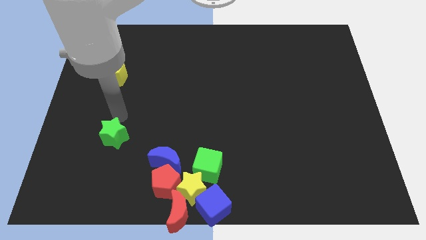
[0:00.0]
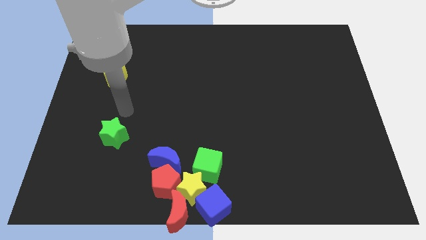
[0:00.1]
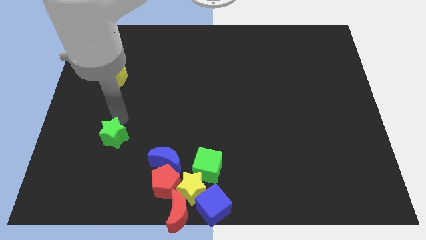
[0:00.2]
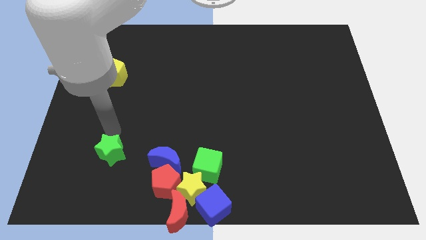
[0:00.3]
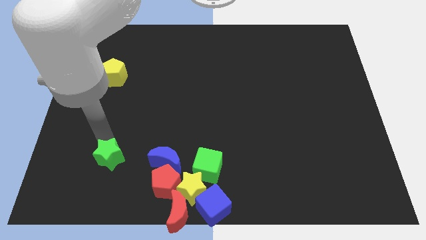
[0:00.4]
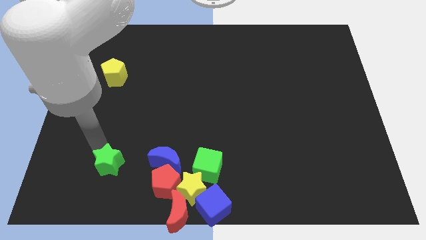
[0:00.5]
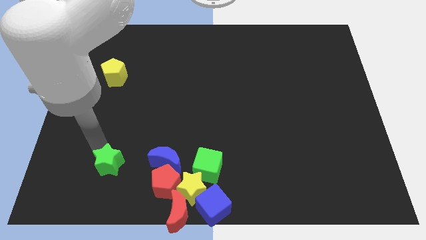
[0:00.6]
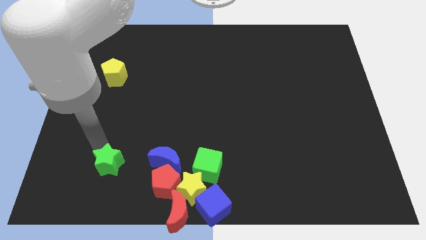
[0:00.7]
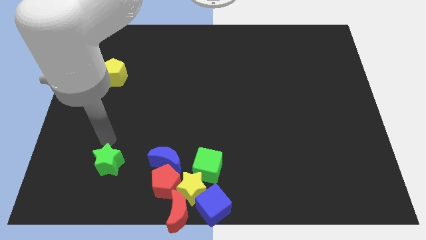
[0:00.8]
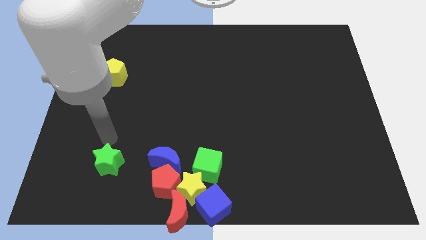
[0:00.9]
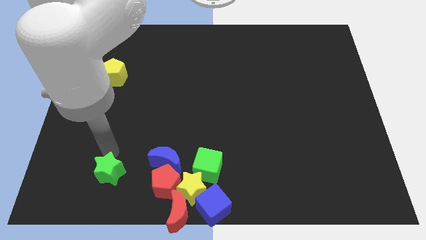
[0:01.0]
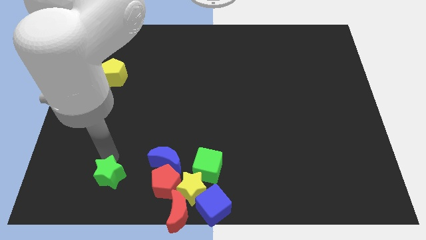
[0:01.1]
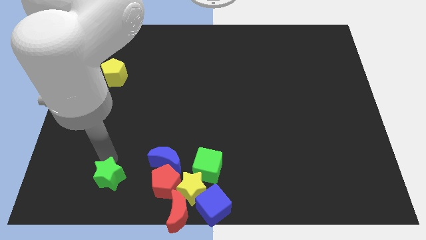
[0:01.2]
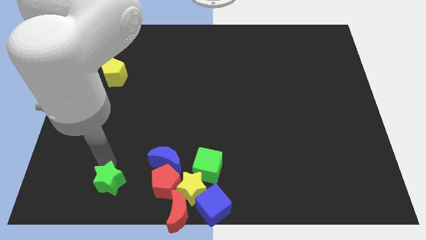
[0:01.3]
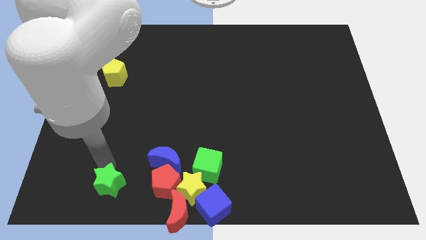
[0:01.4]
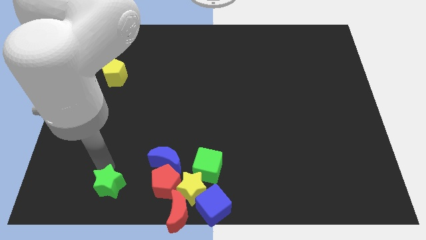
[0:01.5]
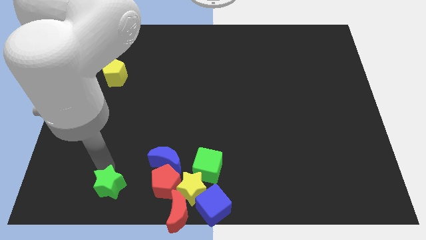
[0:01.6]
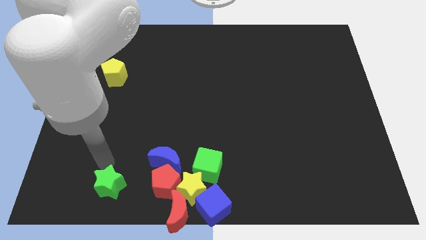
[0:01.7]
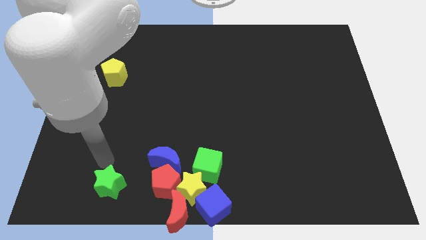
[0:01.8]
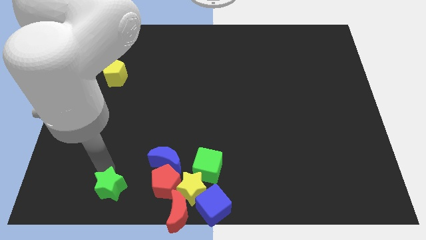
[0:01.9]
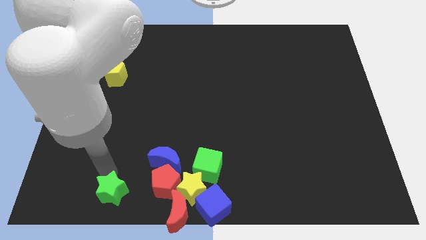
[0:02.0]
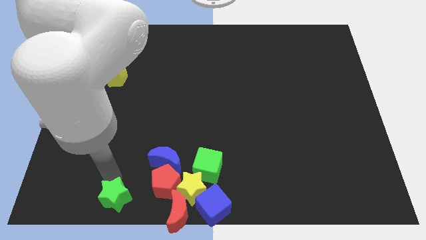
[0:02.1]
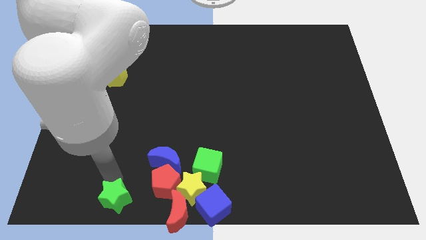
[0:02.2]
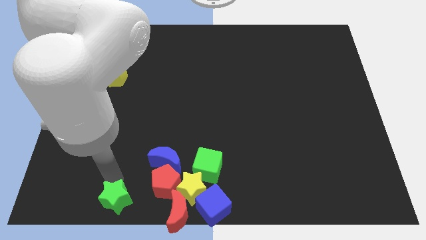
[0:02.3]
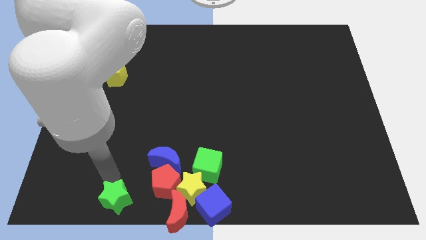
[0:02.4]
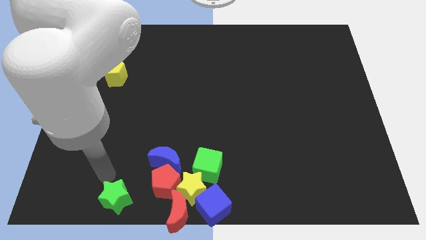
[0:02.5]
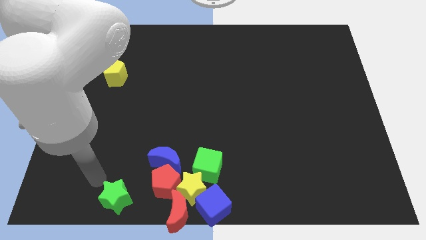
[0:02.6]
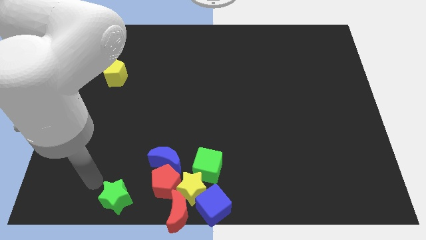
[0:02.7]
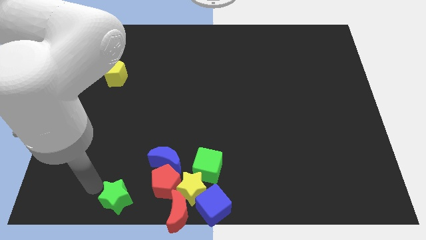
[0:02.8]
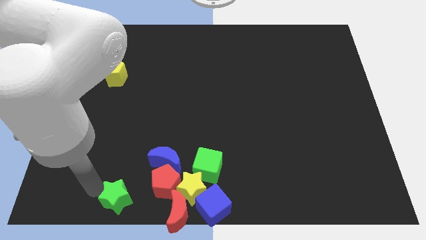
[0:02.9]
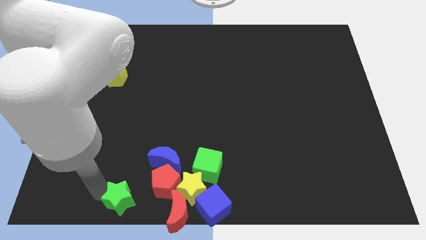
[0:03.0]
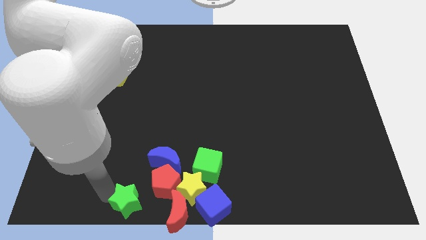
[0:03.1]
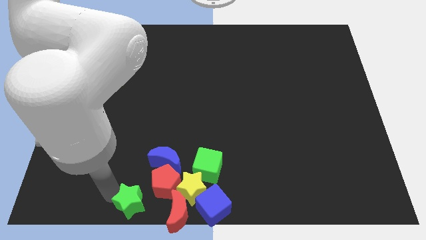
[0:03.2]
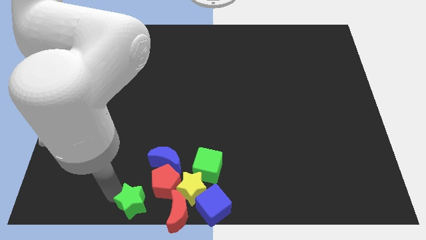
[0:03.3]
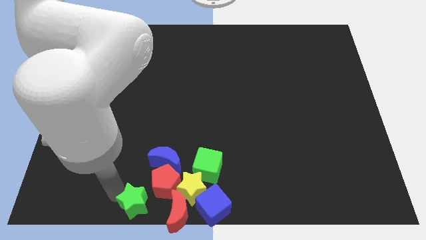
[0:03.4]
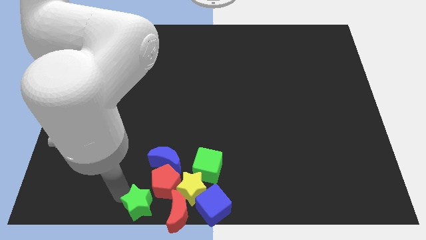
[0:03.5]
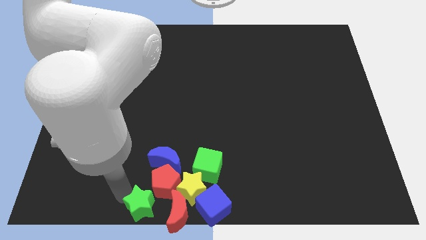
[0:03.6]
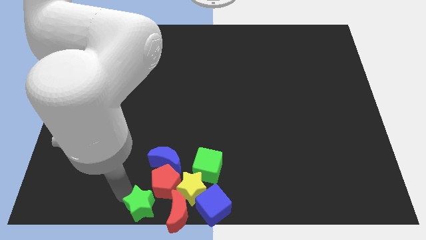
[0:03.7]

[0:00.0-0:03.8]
move the green star to the bottom left to the red pentagon

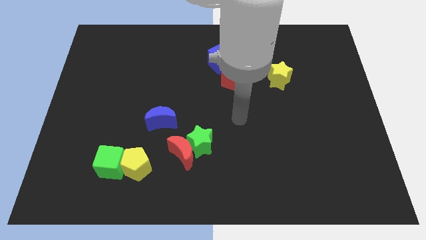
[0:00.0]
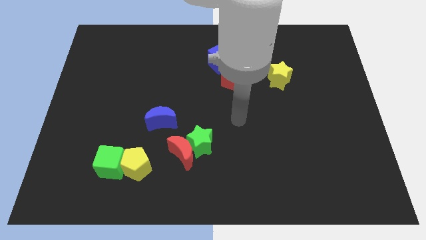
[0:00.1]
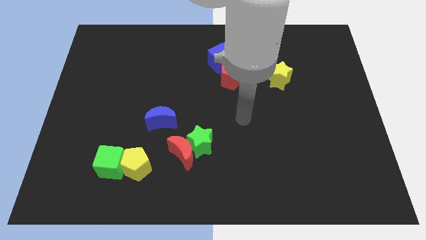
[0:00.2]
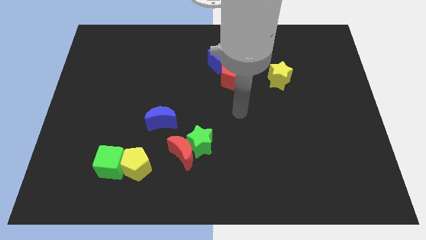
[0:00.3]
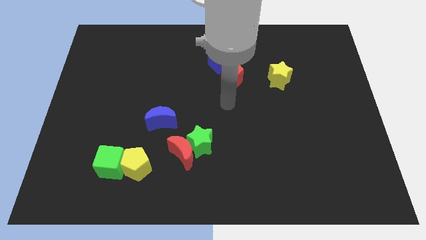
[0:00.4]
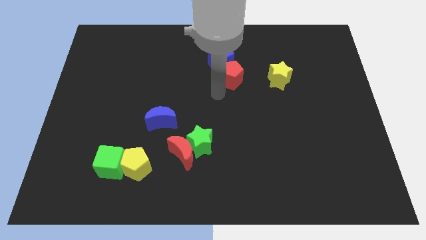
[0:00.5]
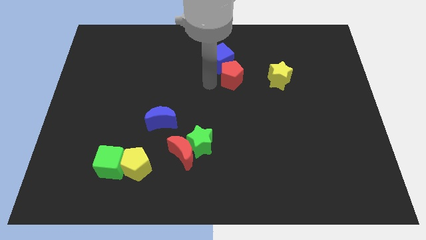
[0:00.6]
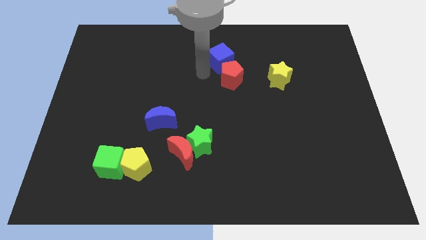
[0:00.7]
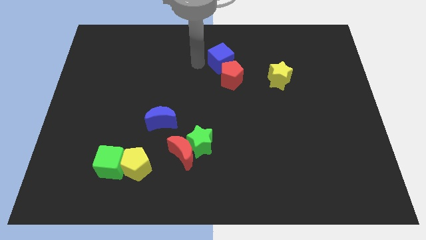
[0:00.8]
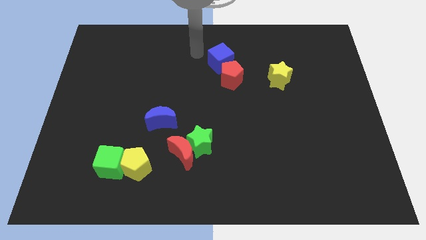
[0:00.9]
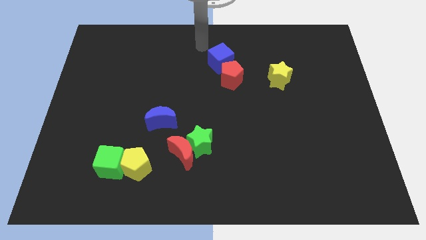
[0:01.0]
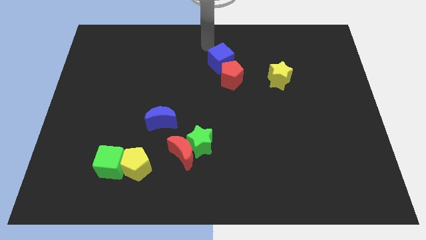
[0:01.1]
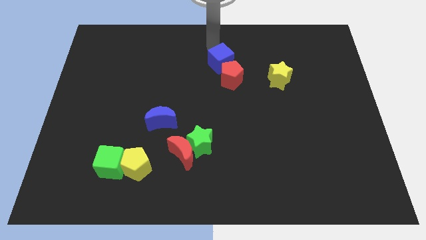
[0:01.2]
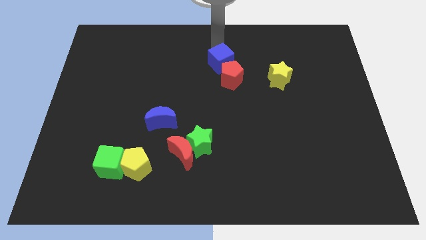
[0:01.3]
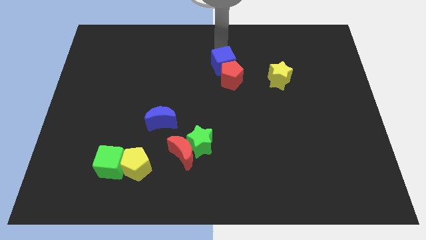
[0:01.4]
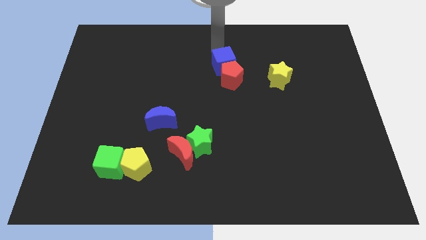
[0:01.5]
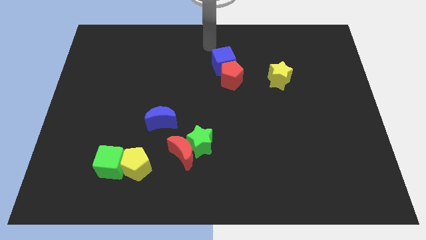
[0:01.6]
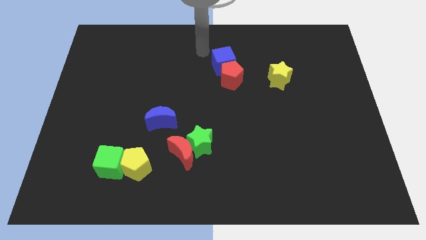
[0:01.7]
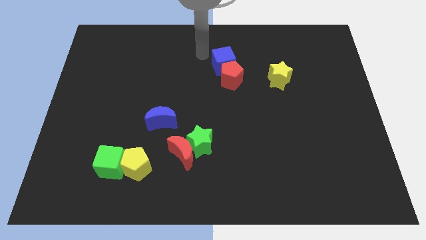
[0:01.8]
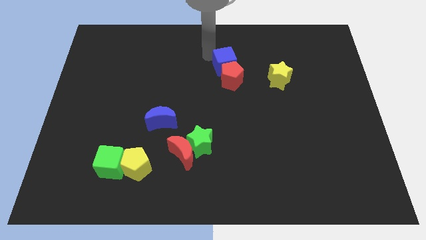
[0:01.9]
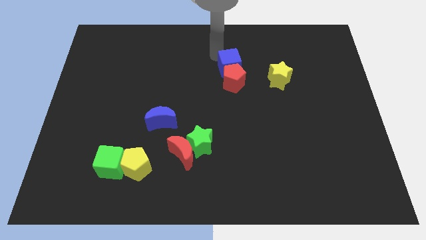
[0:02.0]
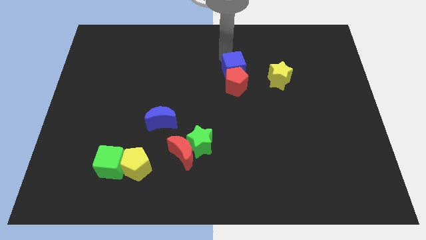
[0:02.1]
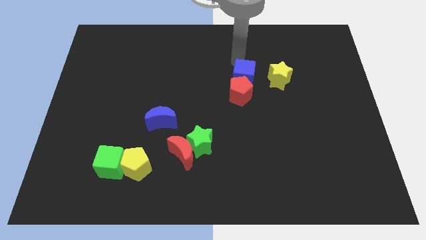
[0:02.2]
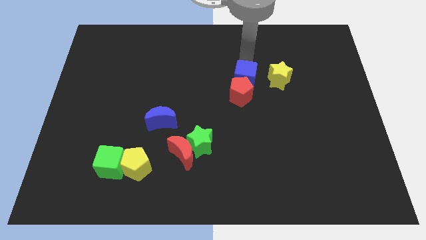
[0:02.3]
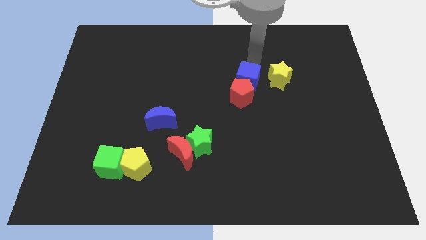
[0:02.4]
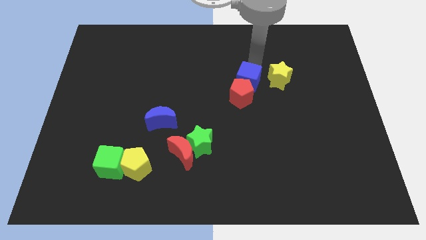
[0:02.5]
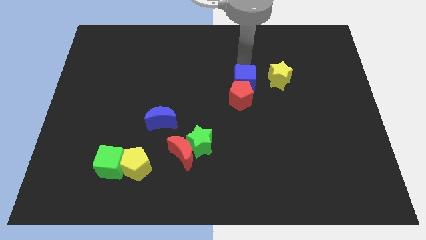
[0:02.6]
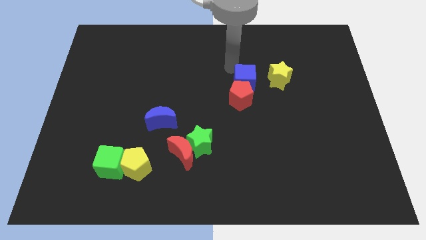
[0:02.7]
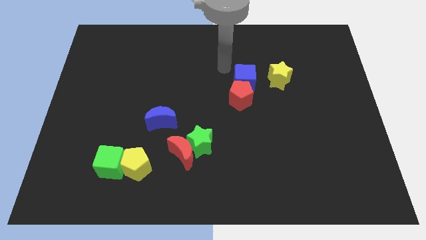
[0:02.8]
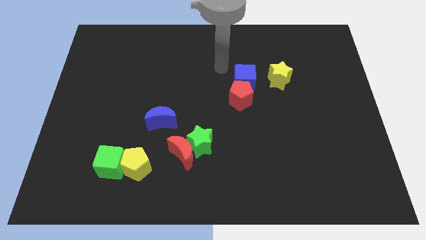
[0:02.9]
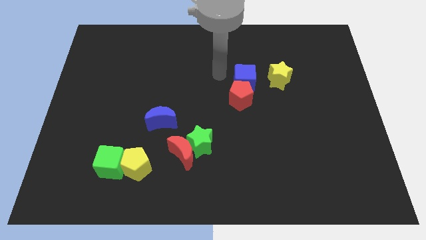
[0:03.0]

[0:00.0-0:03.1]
slightly move down the red pentagon with a blue cube

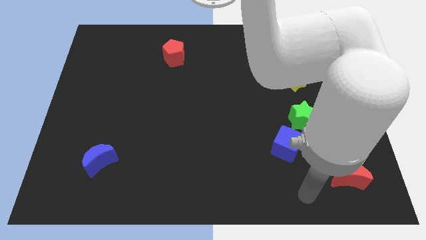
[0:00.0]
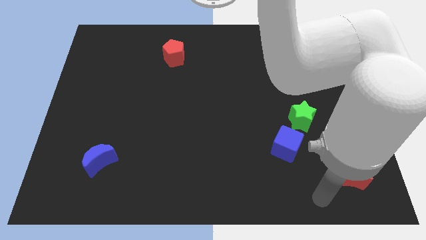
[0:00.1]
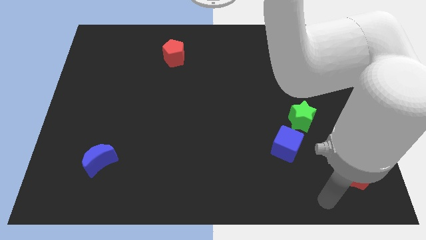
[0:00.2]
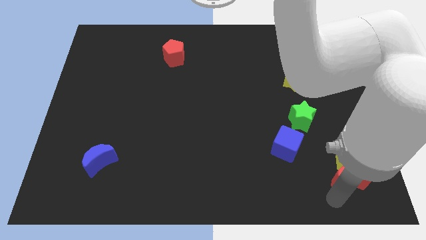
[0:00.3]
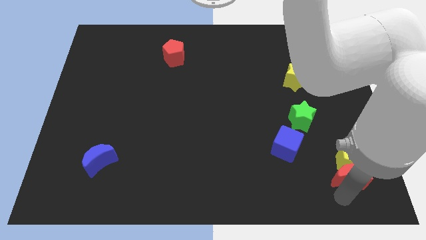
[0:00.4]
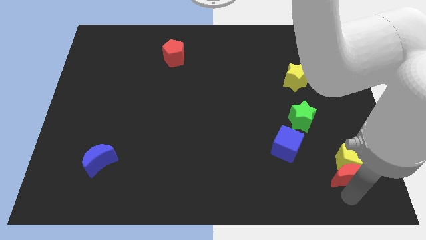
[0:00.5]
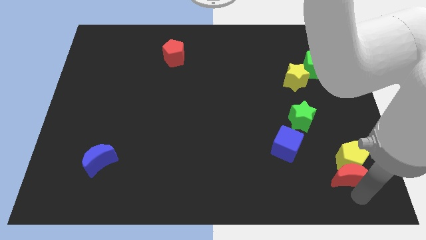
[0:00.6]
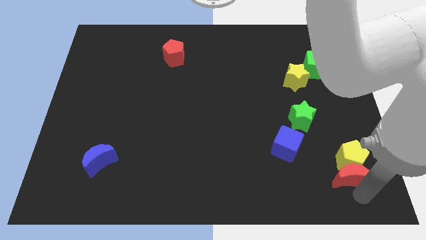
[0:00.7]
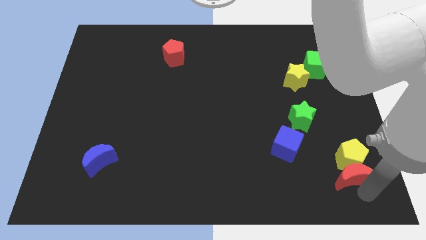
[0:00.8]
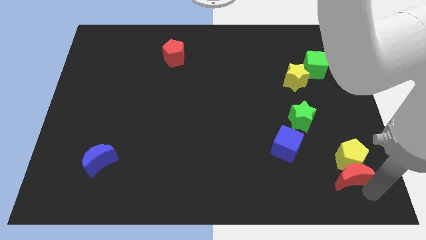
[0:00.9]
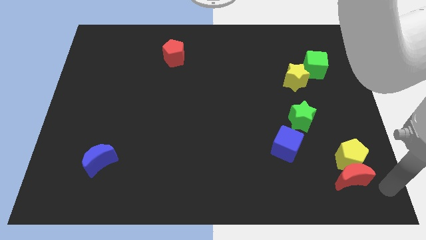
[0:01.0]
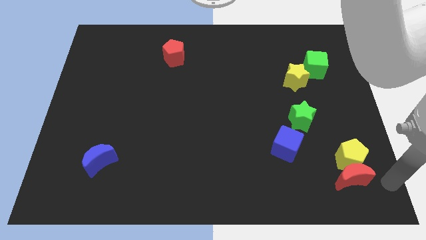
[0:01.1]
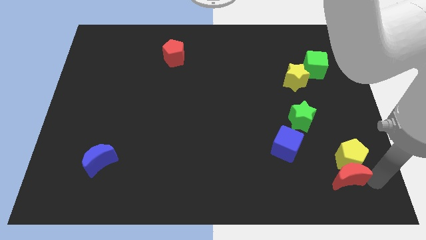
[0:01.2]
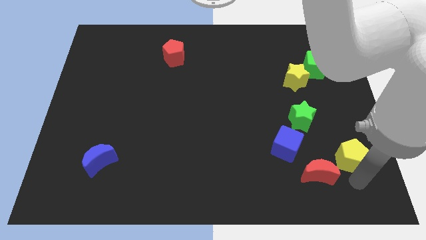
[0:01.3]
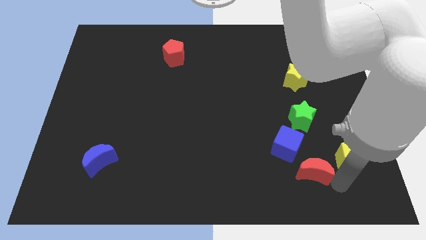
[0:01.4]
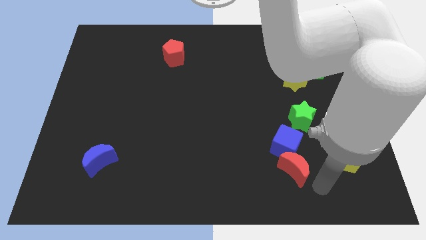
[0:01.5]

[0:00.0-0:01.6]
push the red crescent to its left

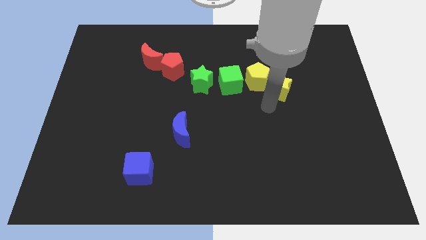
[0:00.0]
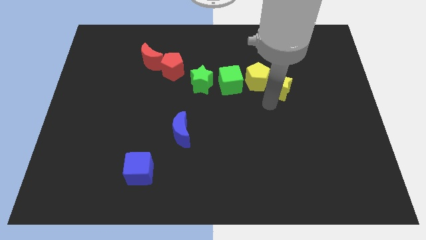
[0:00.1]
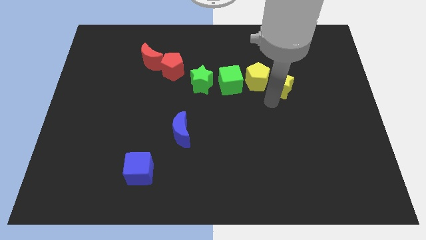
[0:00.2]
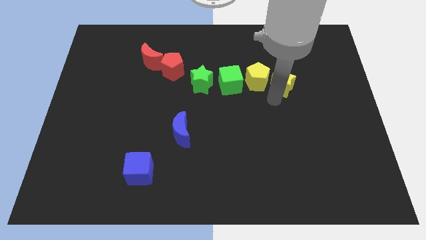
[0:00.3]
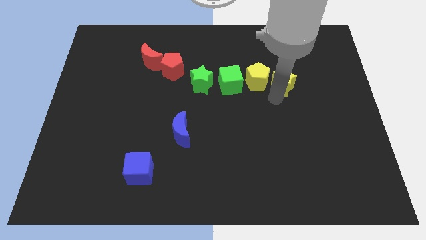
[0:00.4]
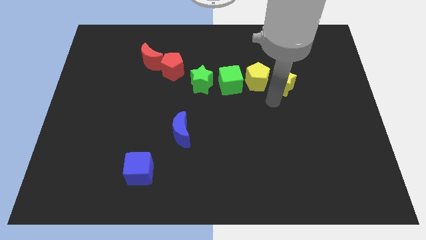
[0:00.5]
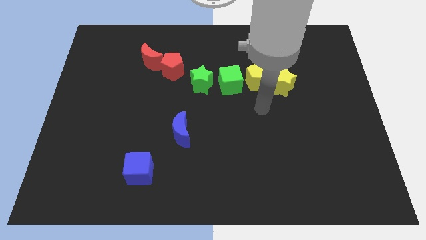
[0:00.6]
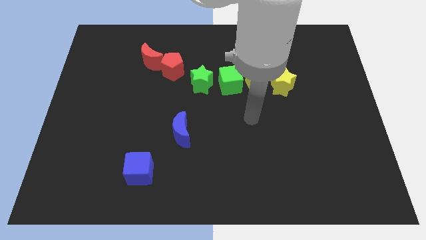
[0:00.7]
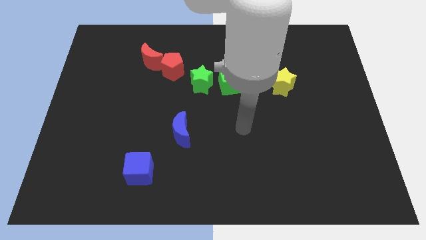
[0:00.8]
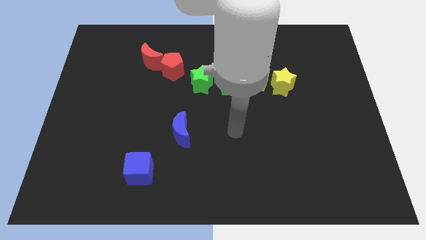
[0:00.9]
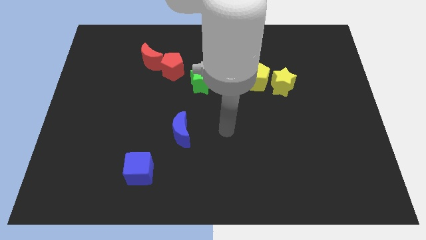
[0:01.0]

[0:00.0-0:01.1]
move the yellow star right side of the yellow pentagon
